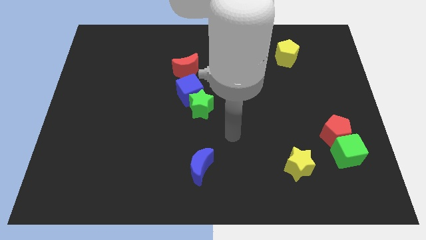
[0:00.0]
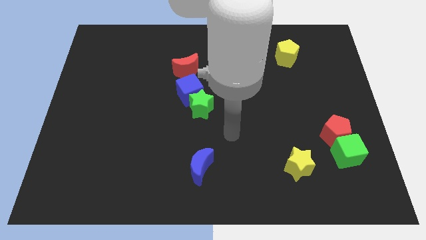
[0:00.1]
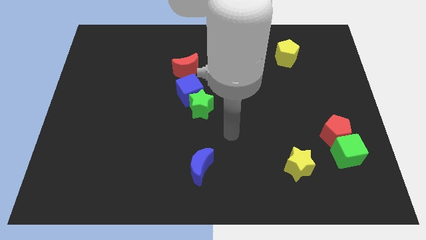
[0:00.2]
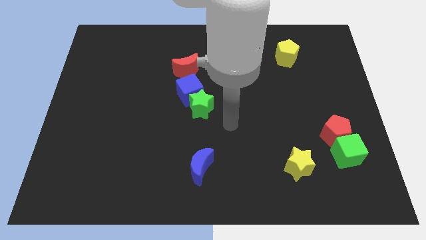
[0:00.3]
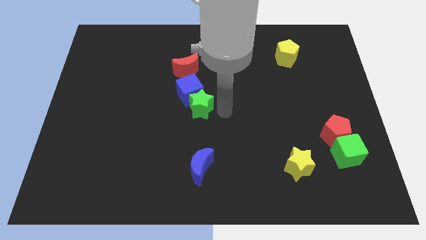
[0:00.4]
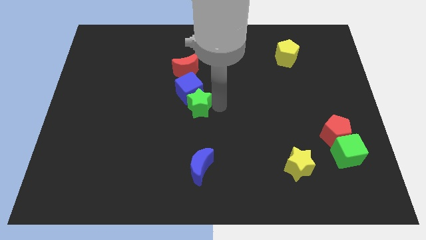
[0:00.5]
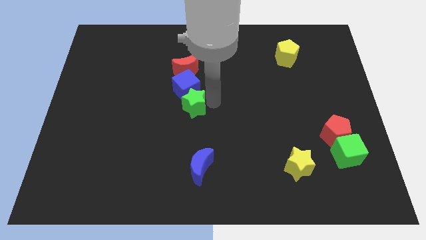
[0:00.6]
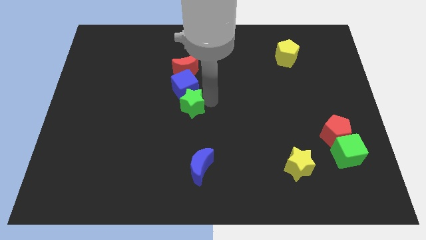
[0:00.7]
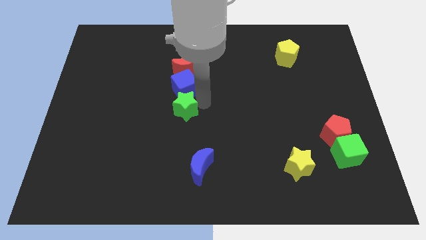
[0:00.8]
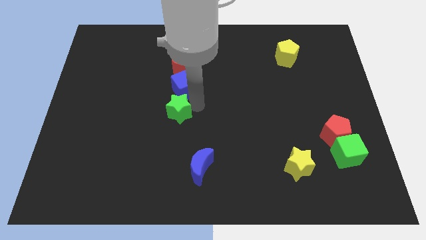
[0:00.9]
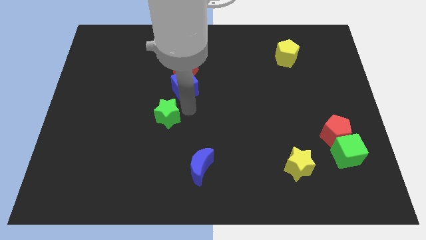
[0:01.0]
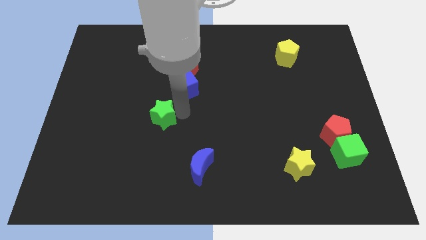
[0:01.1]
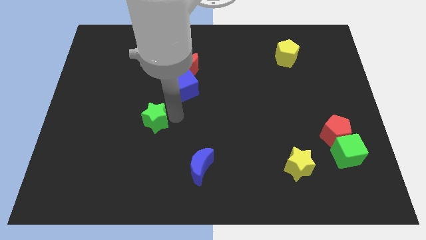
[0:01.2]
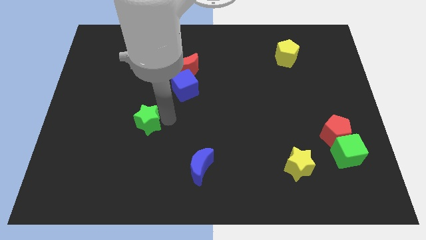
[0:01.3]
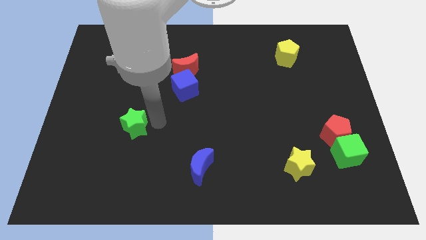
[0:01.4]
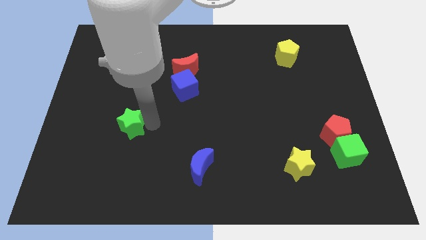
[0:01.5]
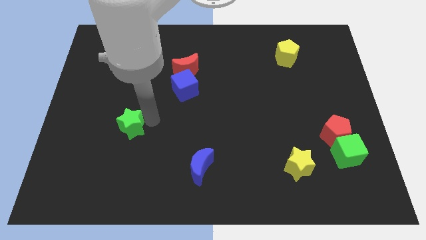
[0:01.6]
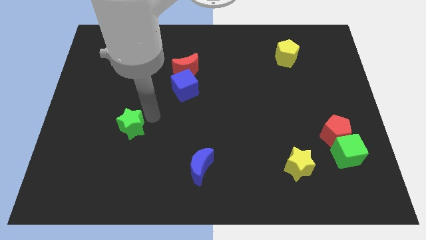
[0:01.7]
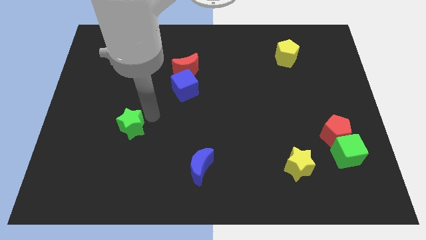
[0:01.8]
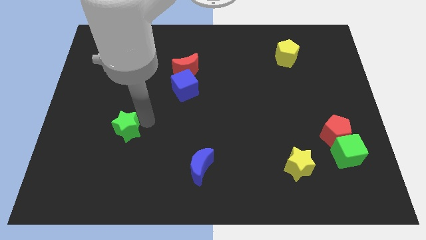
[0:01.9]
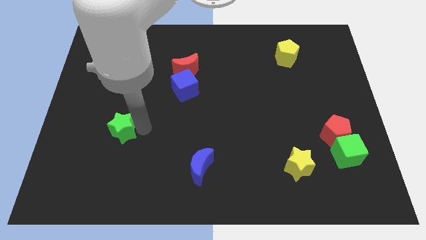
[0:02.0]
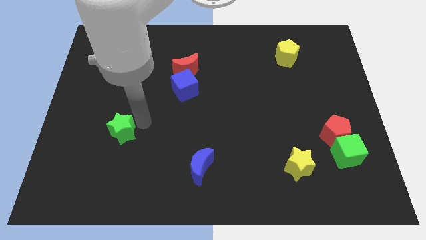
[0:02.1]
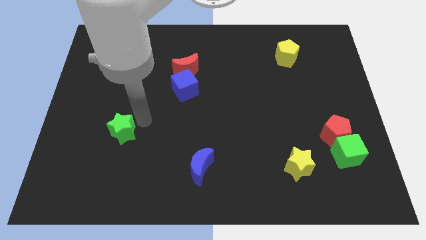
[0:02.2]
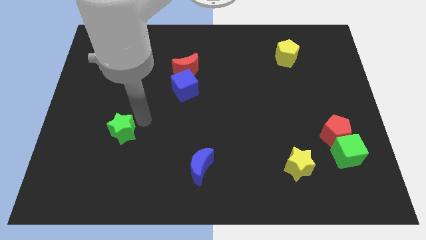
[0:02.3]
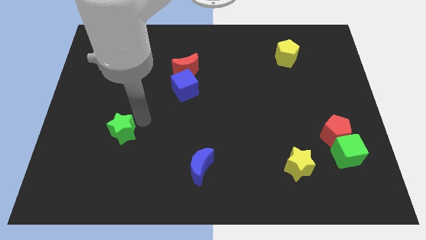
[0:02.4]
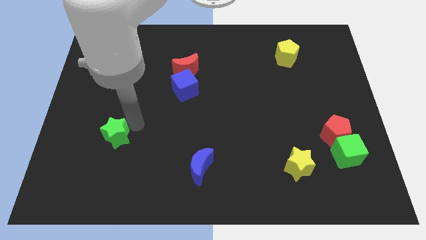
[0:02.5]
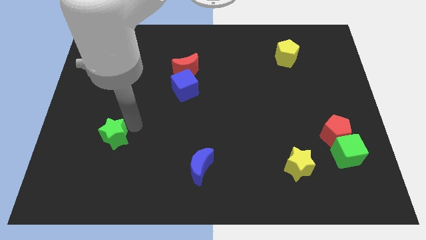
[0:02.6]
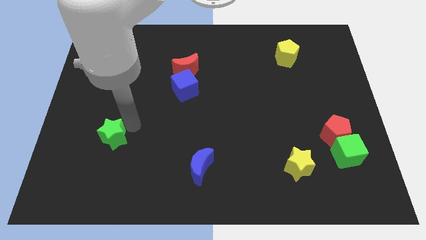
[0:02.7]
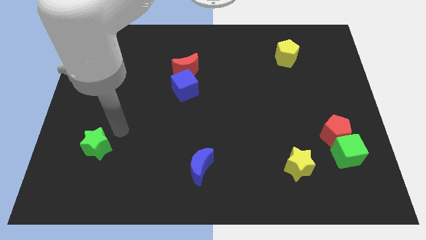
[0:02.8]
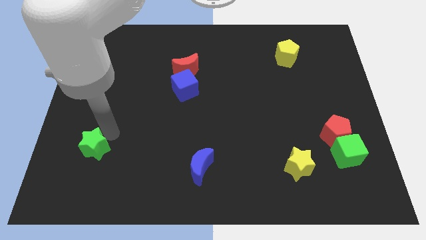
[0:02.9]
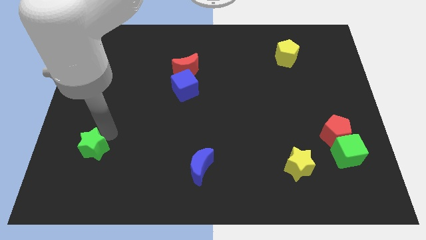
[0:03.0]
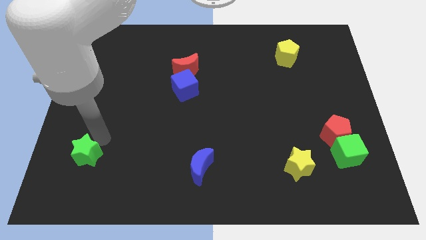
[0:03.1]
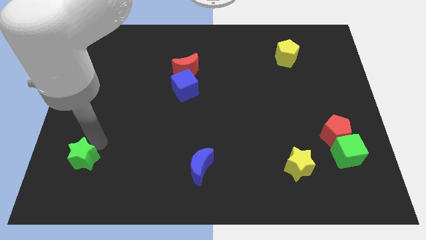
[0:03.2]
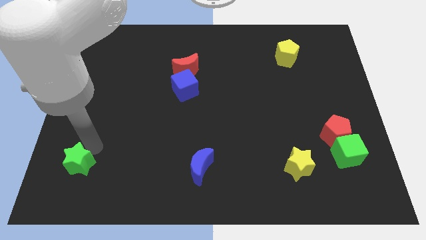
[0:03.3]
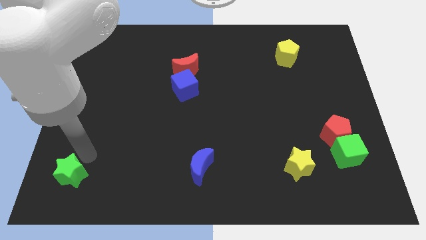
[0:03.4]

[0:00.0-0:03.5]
drag the green star towards the bottom left side of the board

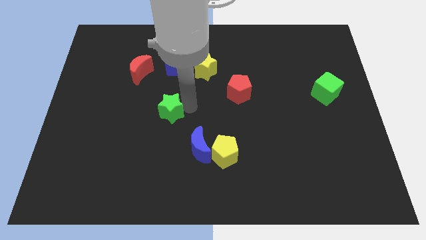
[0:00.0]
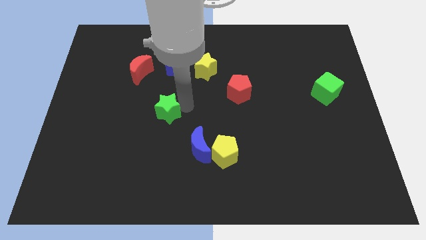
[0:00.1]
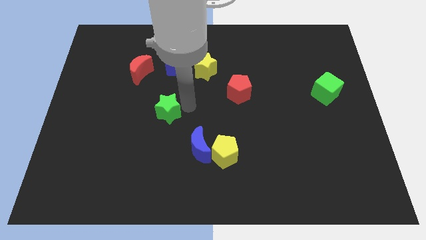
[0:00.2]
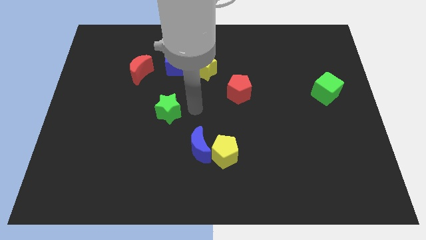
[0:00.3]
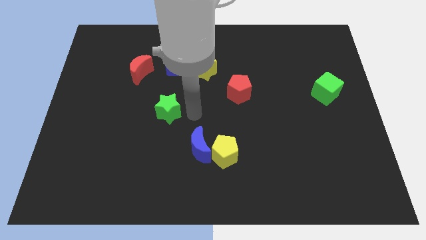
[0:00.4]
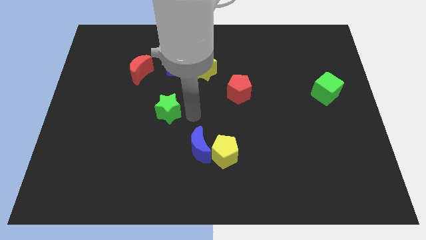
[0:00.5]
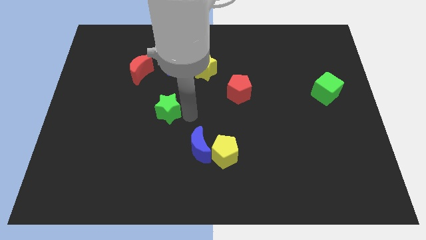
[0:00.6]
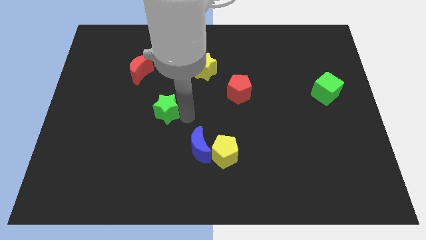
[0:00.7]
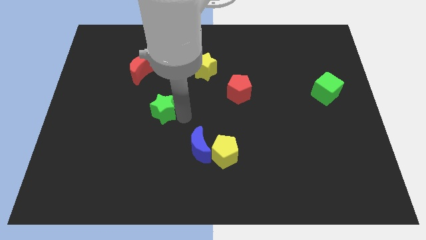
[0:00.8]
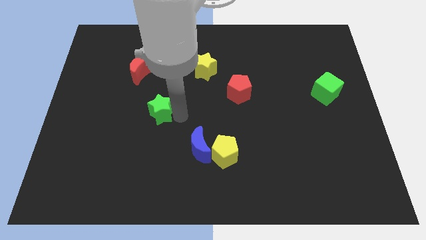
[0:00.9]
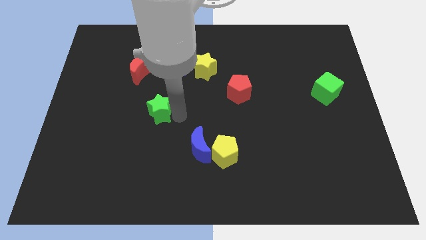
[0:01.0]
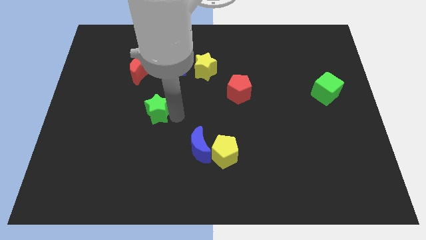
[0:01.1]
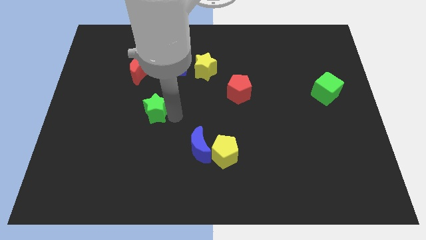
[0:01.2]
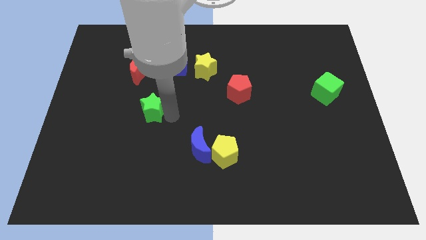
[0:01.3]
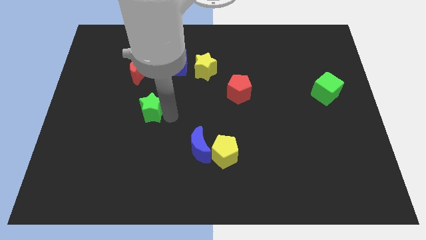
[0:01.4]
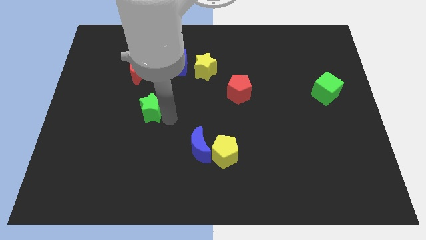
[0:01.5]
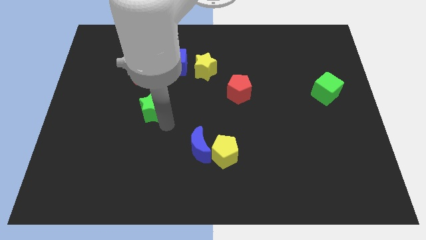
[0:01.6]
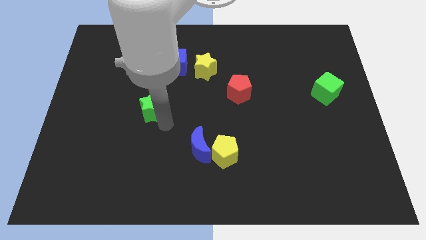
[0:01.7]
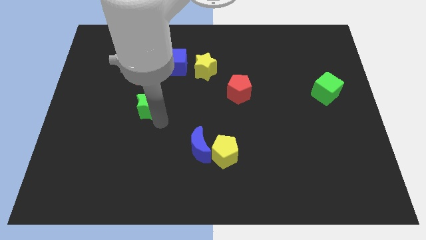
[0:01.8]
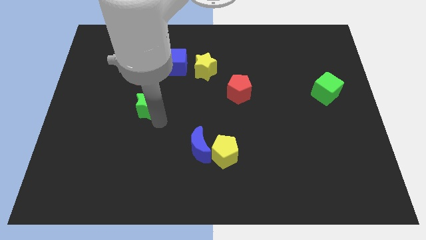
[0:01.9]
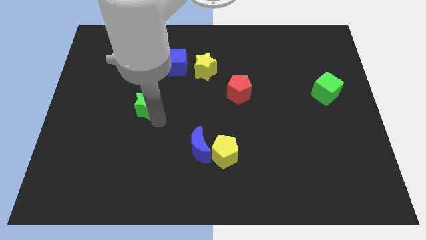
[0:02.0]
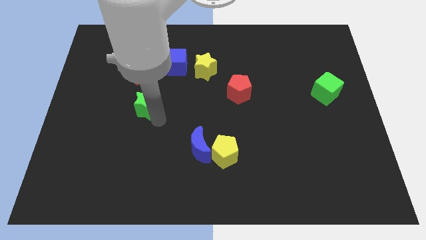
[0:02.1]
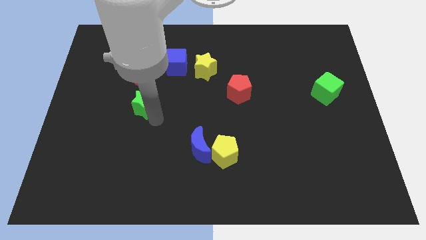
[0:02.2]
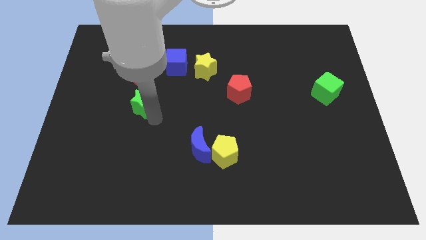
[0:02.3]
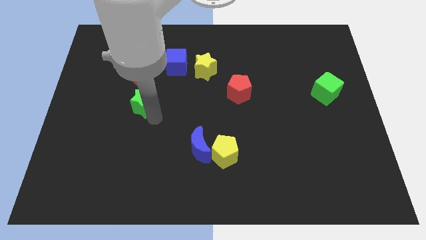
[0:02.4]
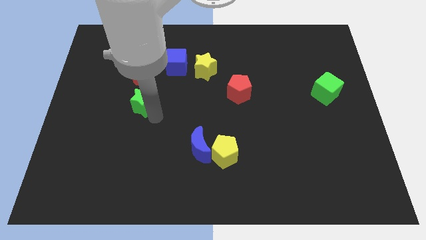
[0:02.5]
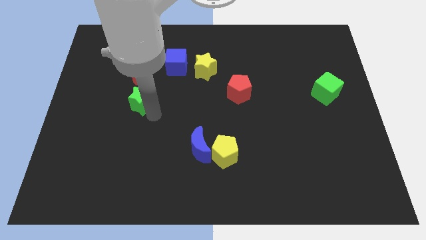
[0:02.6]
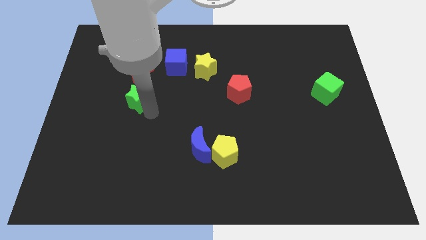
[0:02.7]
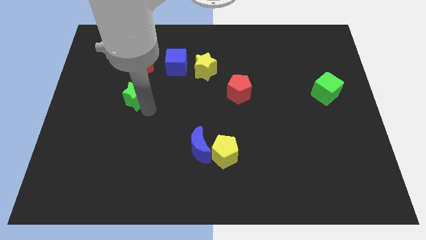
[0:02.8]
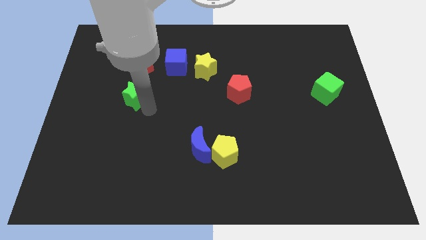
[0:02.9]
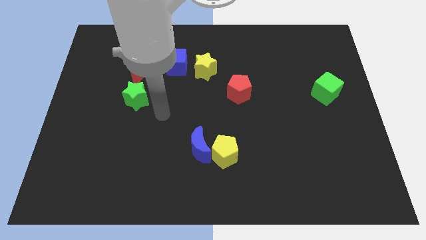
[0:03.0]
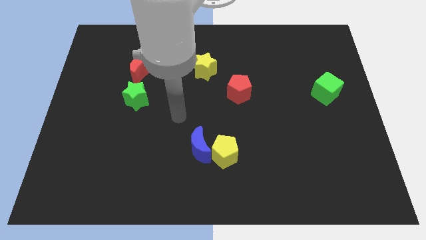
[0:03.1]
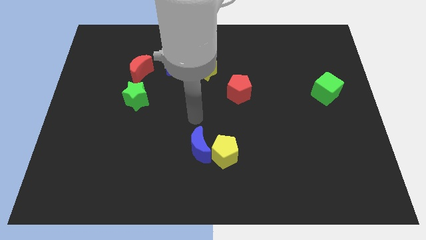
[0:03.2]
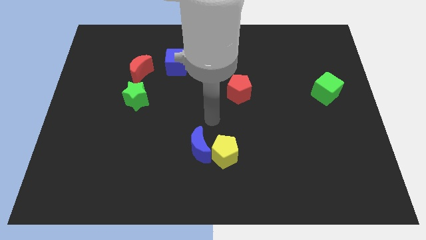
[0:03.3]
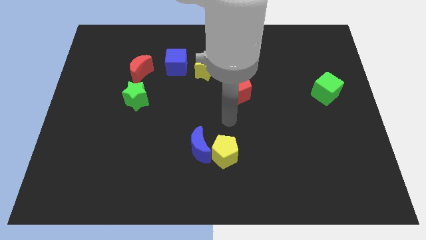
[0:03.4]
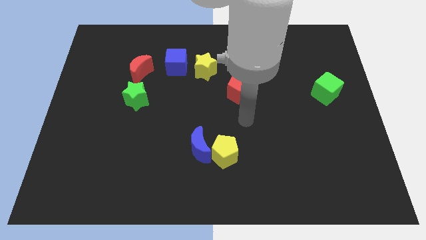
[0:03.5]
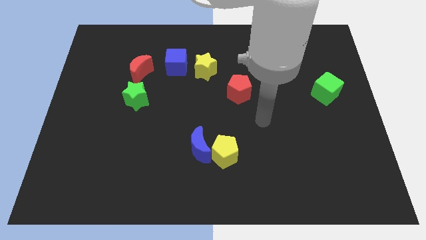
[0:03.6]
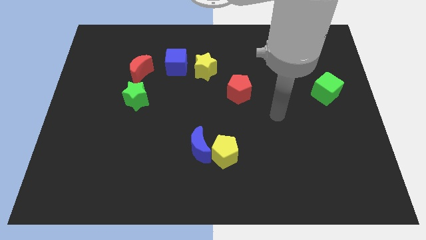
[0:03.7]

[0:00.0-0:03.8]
move the green star vertically below to the red crescent

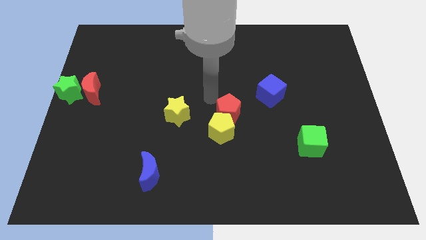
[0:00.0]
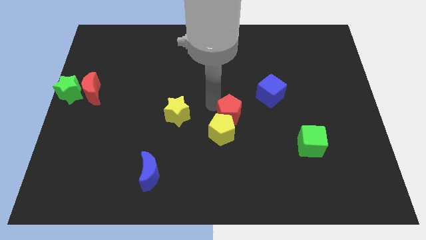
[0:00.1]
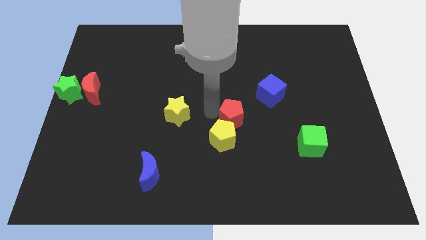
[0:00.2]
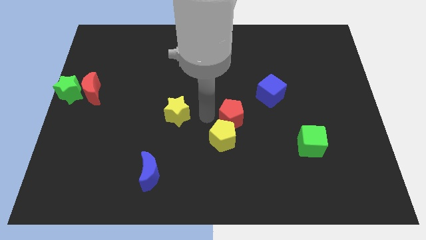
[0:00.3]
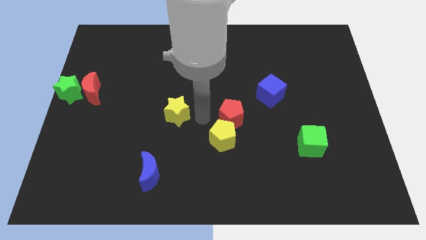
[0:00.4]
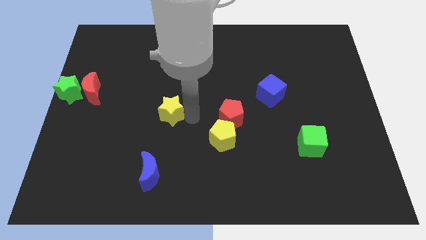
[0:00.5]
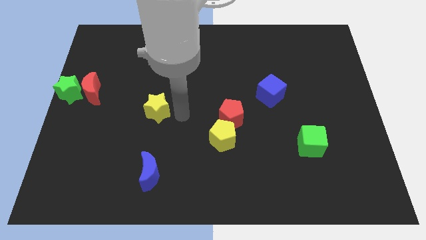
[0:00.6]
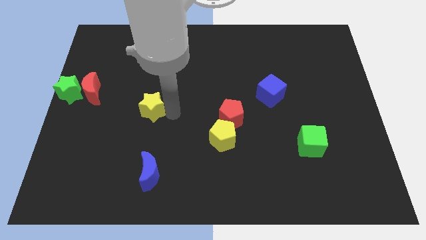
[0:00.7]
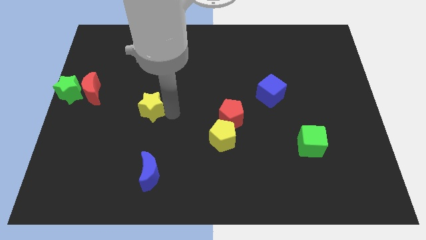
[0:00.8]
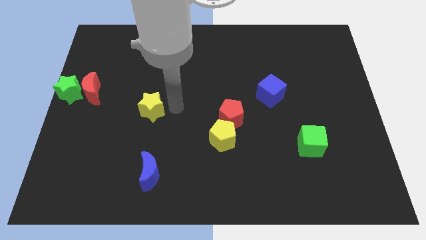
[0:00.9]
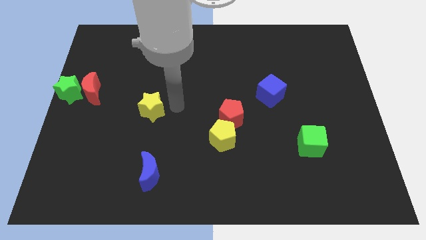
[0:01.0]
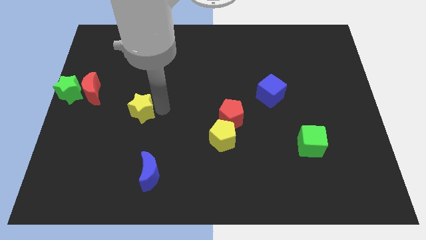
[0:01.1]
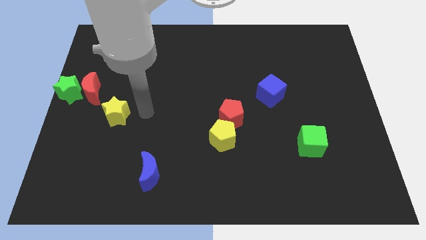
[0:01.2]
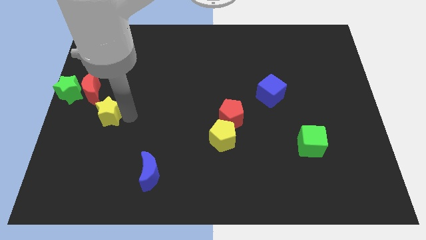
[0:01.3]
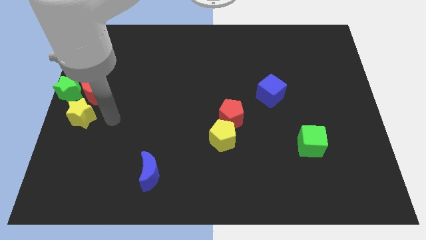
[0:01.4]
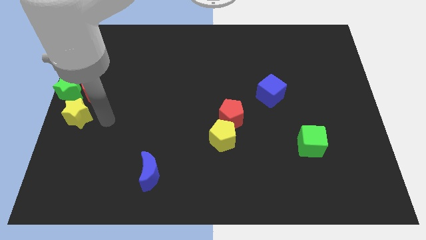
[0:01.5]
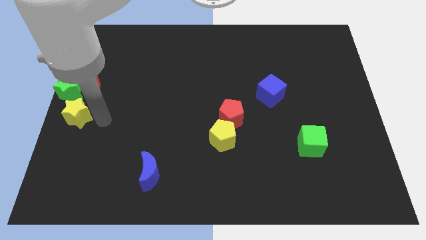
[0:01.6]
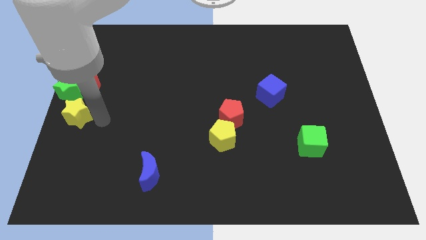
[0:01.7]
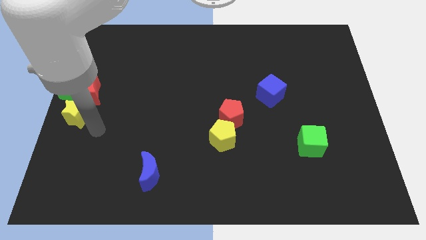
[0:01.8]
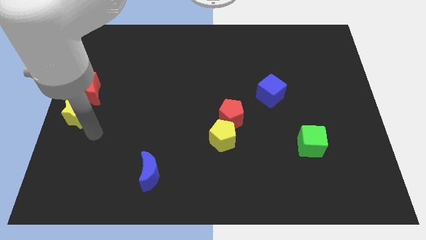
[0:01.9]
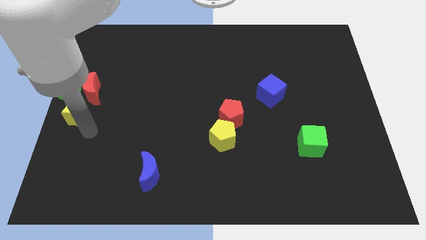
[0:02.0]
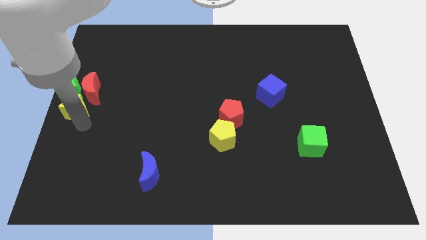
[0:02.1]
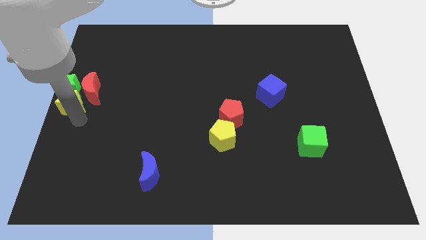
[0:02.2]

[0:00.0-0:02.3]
slide the yellow star to the bottom of the green star
